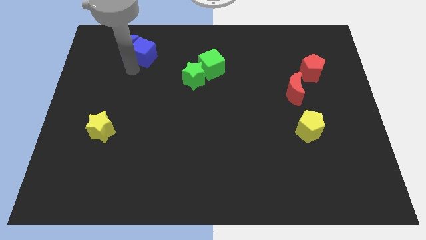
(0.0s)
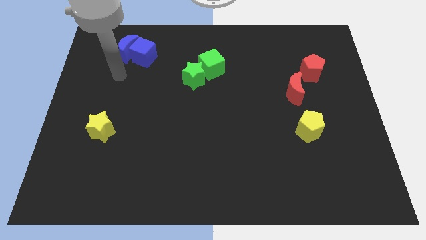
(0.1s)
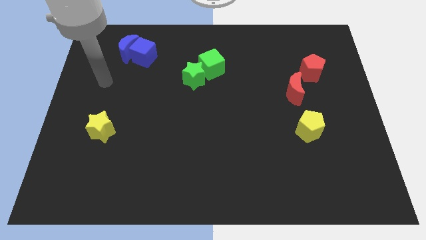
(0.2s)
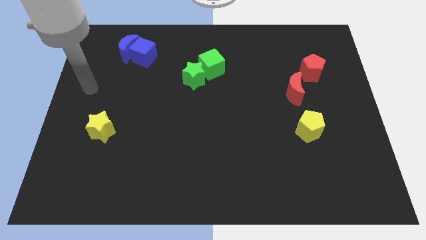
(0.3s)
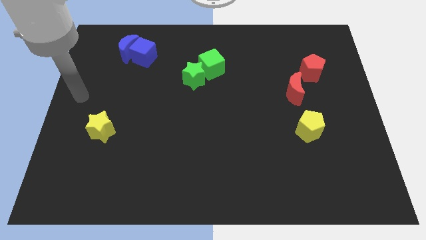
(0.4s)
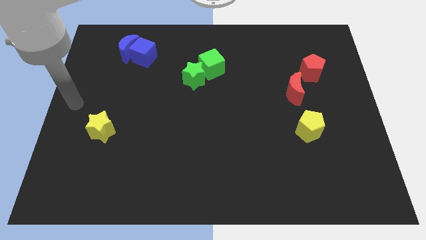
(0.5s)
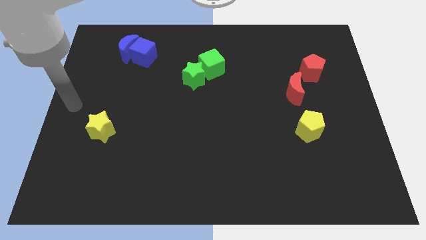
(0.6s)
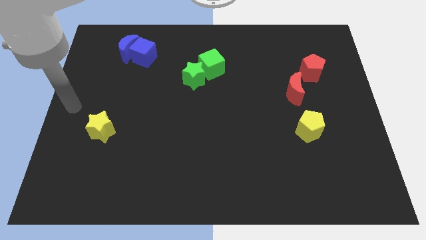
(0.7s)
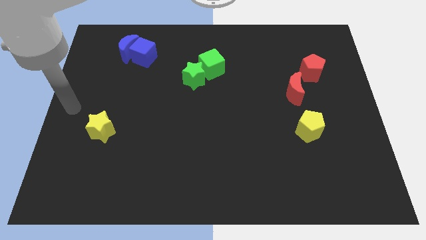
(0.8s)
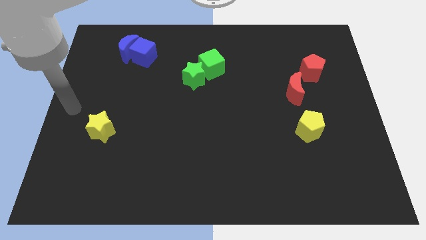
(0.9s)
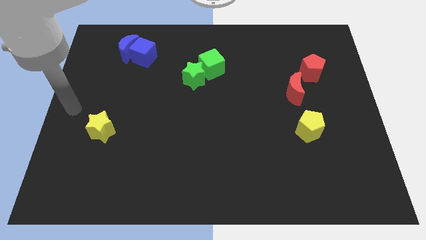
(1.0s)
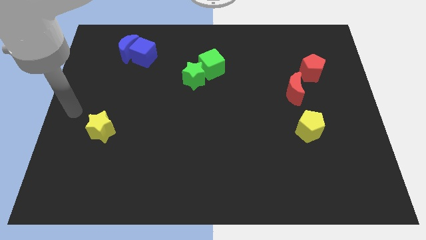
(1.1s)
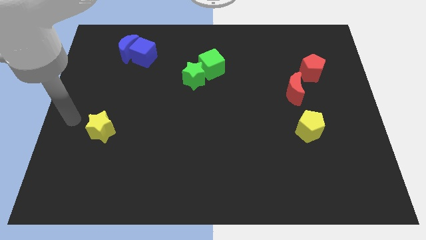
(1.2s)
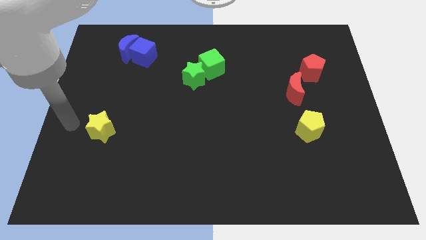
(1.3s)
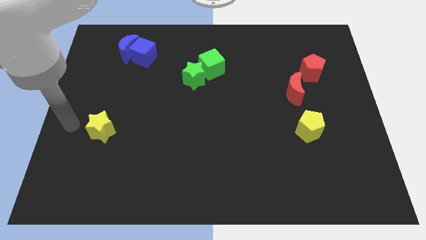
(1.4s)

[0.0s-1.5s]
point your arm at the left of the yellow star

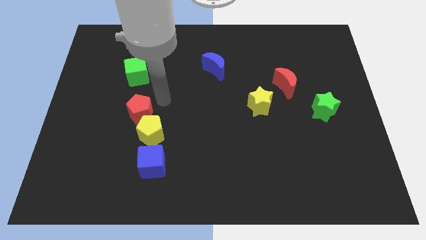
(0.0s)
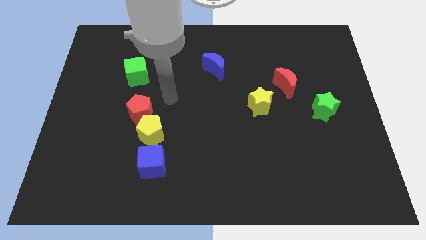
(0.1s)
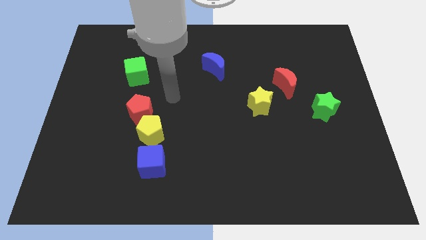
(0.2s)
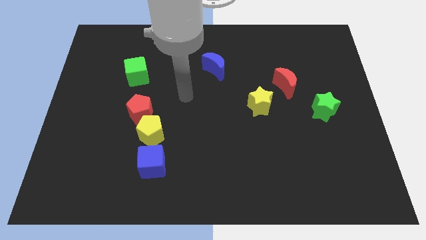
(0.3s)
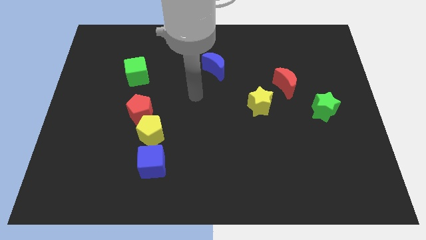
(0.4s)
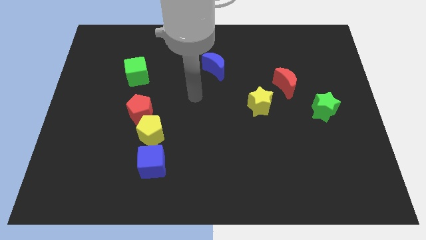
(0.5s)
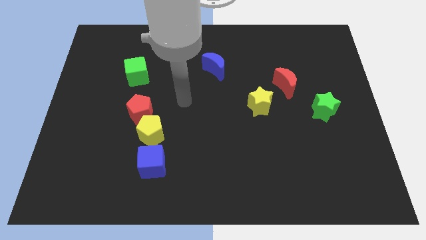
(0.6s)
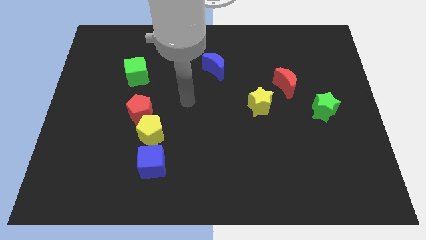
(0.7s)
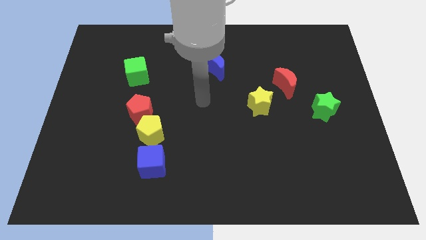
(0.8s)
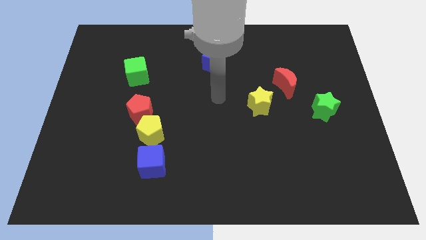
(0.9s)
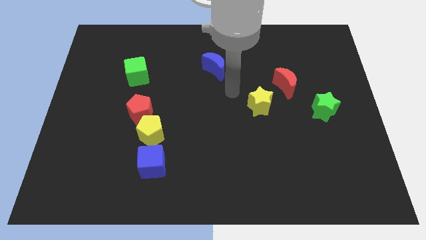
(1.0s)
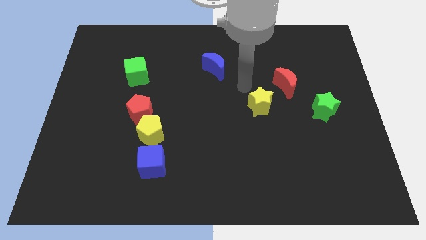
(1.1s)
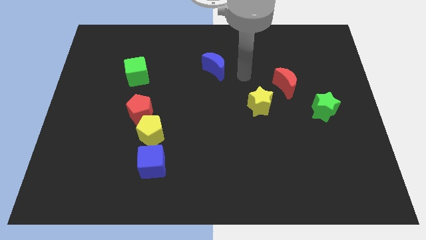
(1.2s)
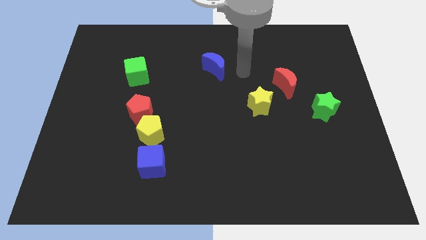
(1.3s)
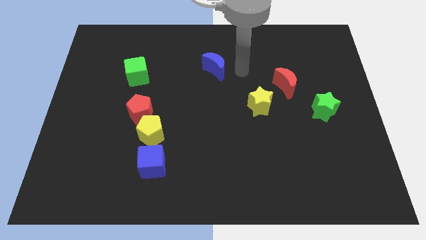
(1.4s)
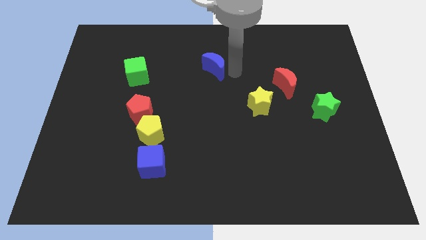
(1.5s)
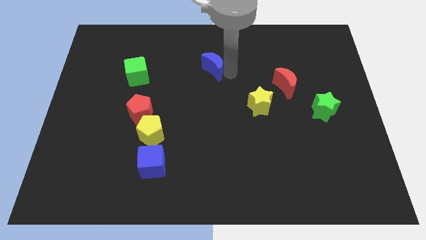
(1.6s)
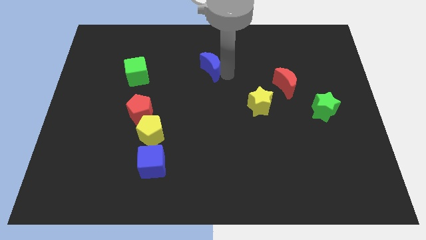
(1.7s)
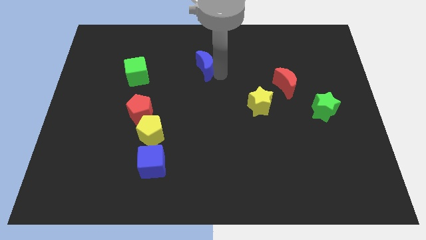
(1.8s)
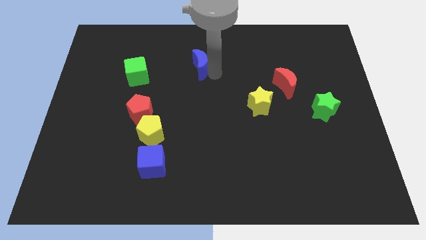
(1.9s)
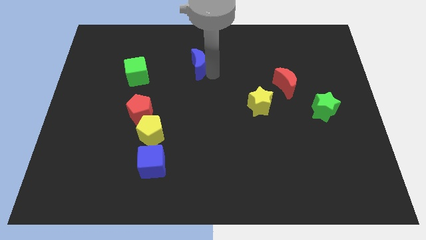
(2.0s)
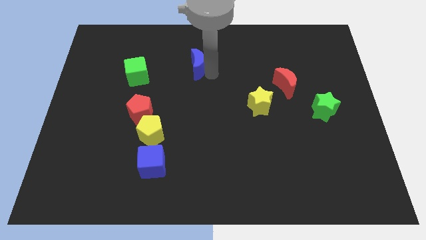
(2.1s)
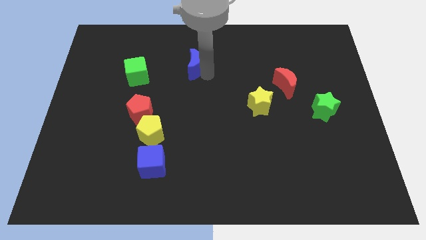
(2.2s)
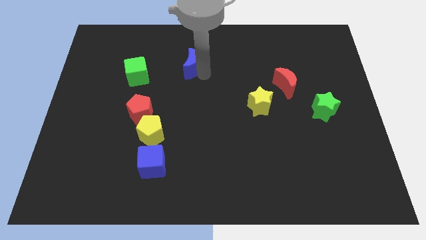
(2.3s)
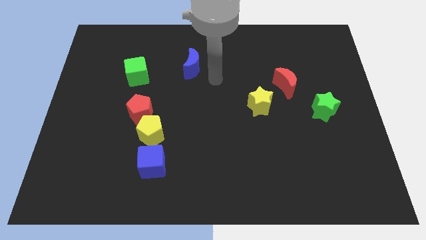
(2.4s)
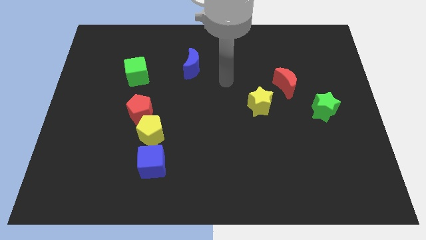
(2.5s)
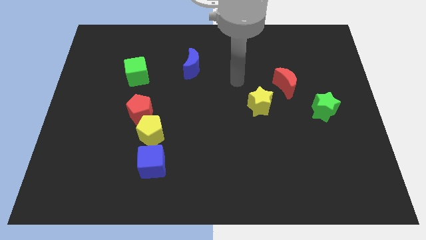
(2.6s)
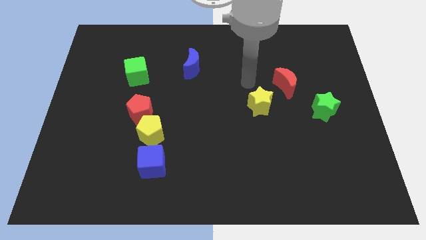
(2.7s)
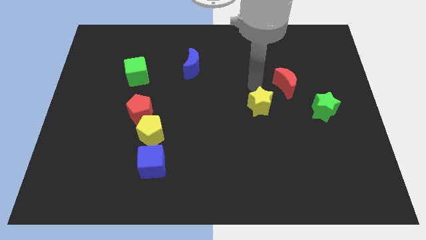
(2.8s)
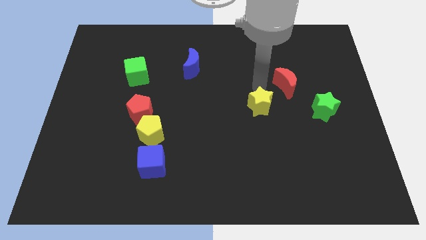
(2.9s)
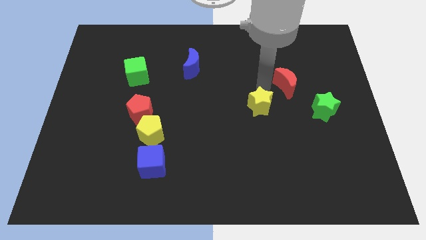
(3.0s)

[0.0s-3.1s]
push the blue crescent slightly to the left

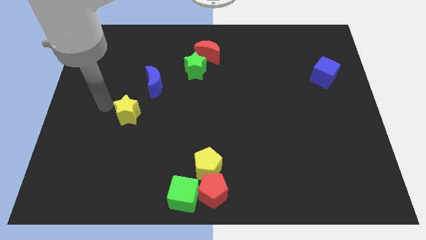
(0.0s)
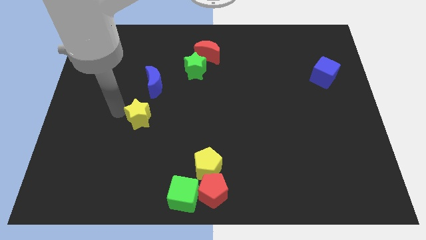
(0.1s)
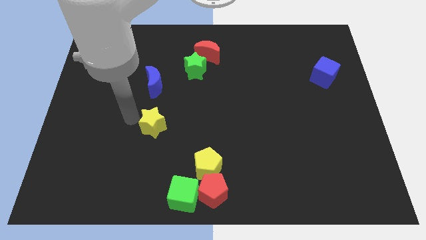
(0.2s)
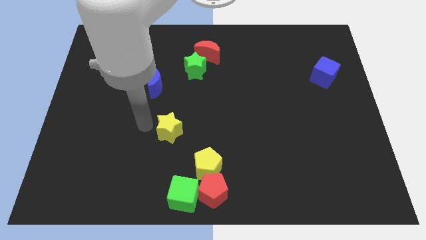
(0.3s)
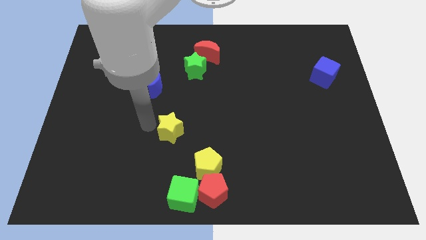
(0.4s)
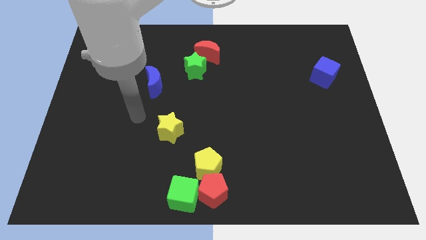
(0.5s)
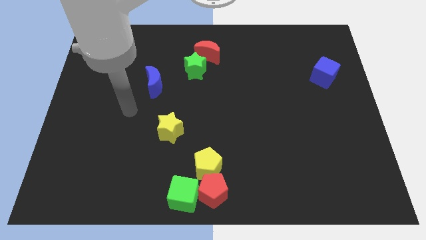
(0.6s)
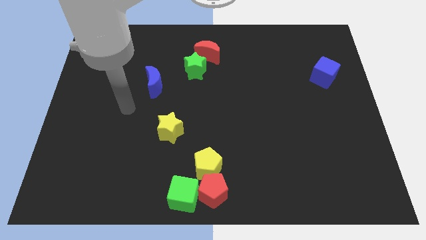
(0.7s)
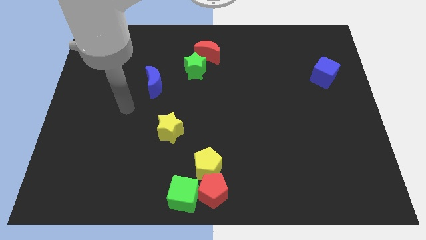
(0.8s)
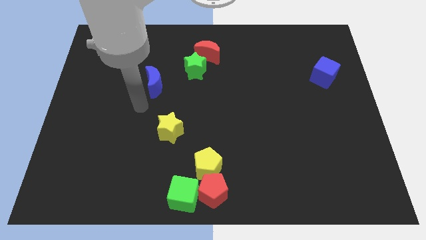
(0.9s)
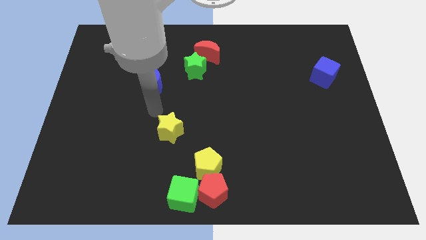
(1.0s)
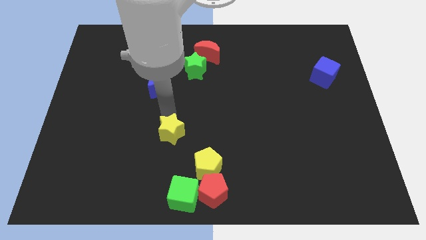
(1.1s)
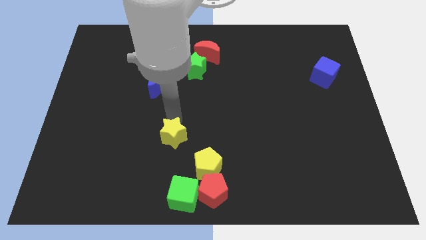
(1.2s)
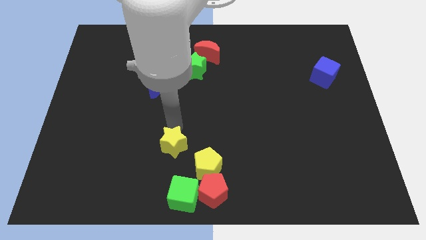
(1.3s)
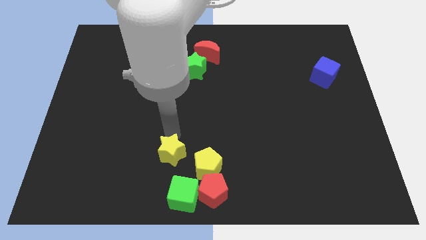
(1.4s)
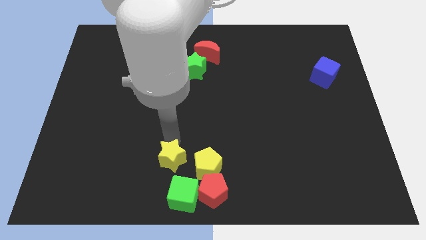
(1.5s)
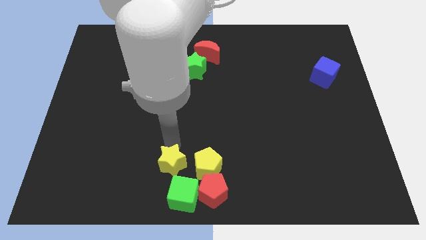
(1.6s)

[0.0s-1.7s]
push the yellow star diagonally towards the group of blocks

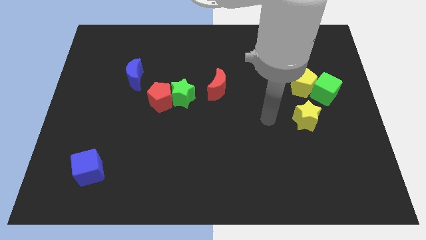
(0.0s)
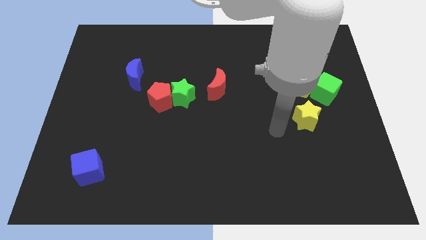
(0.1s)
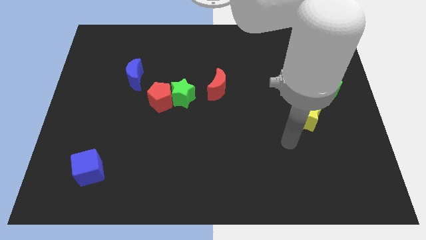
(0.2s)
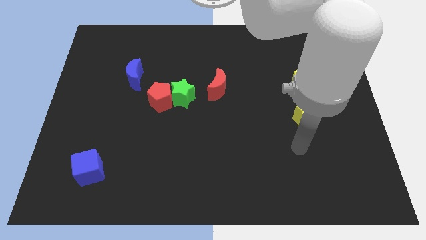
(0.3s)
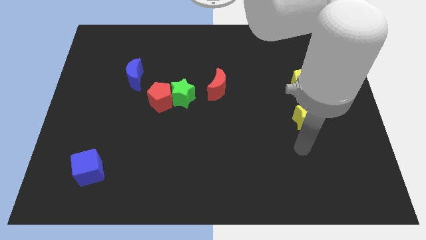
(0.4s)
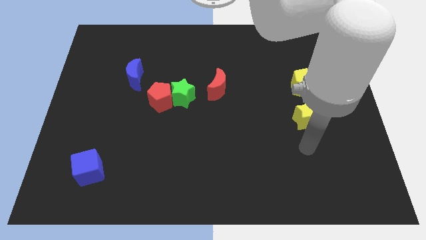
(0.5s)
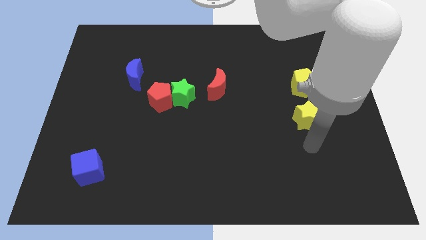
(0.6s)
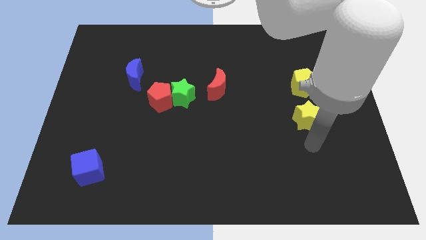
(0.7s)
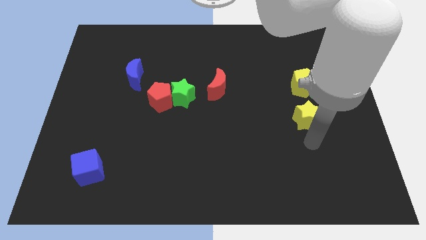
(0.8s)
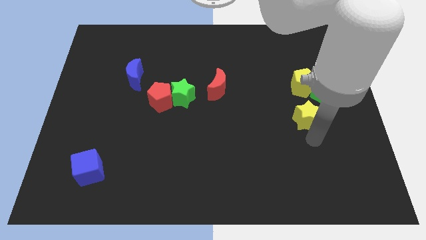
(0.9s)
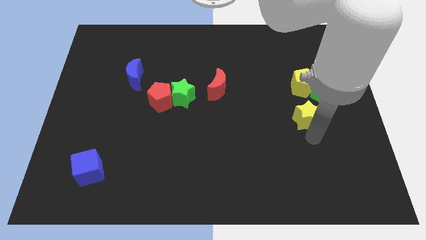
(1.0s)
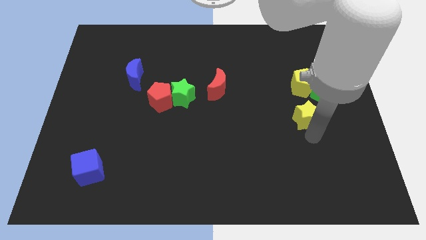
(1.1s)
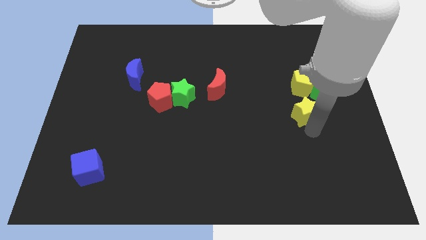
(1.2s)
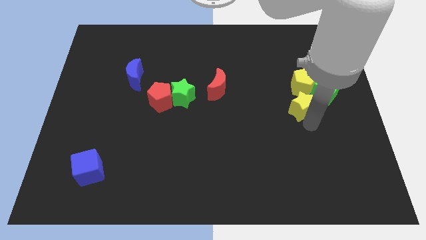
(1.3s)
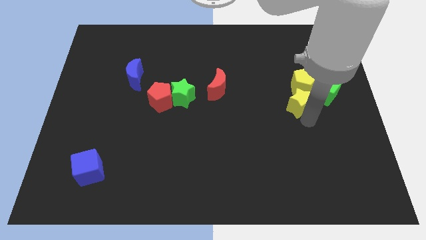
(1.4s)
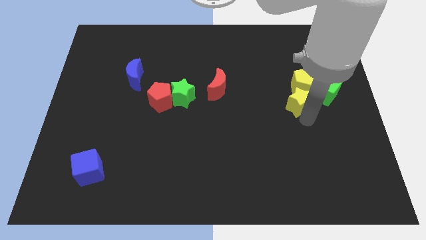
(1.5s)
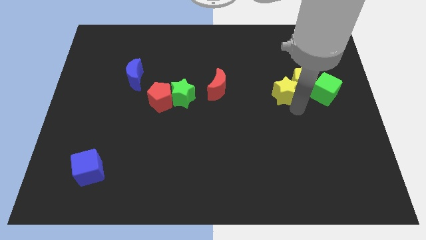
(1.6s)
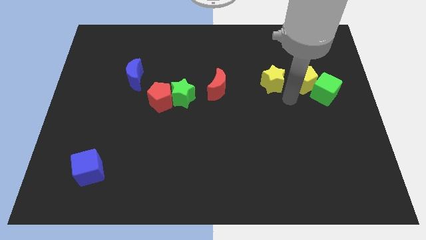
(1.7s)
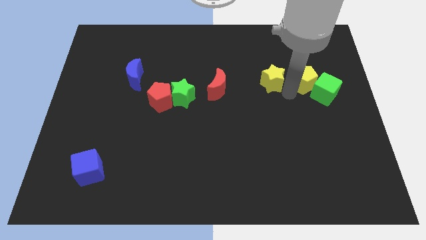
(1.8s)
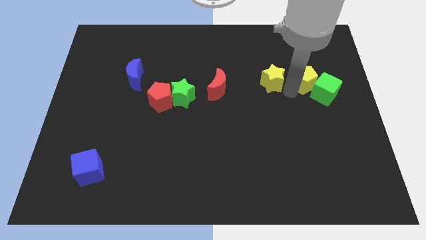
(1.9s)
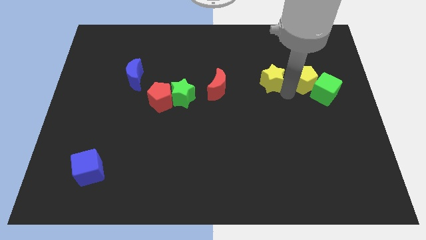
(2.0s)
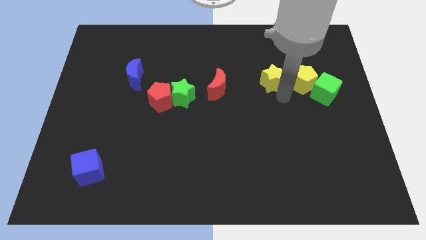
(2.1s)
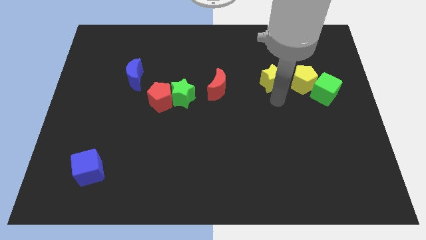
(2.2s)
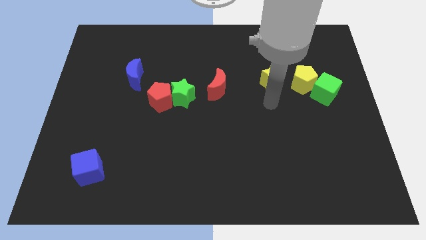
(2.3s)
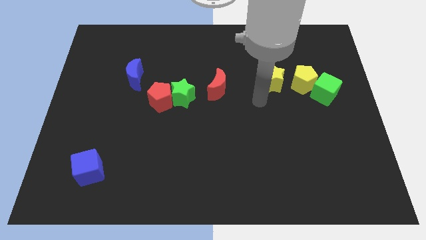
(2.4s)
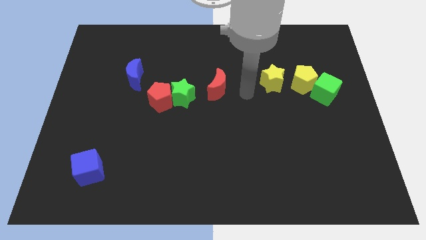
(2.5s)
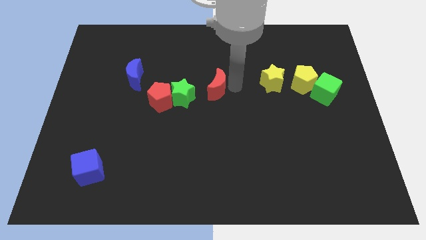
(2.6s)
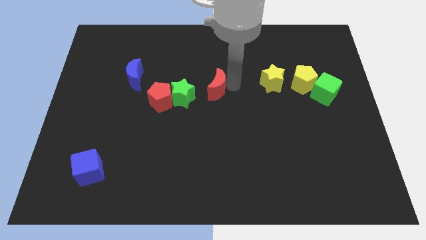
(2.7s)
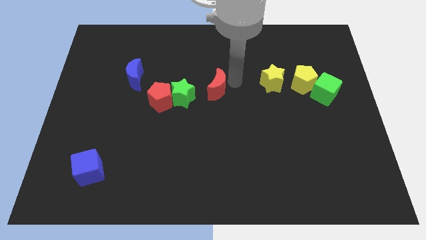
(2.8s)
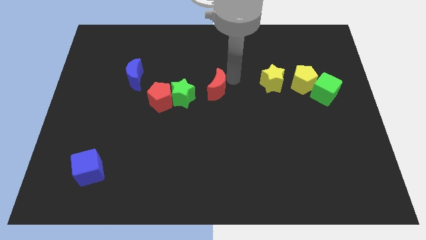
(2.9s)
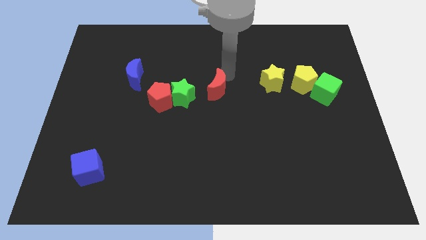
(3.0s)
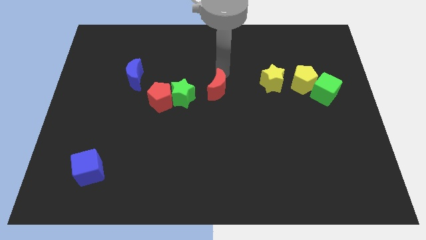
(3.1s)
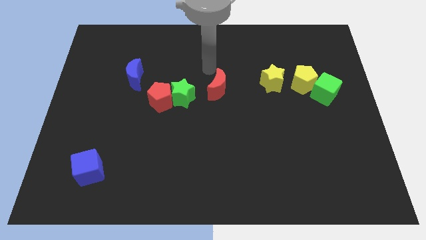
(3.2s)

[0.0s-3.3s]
move the yellow star to the left of the yellow pentagon
